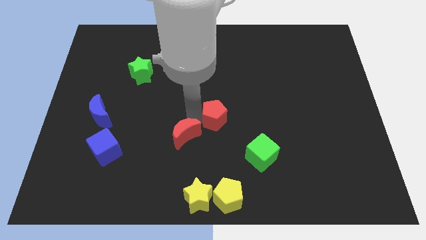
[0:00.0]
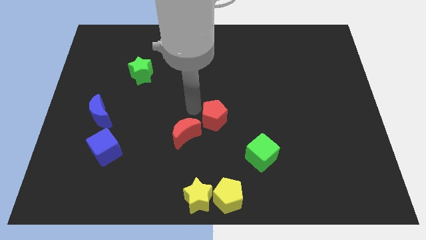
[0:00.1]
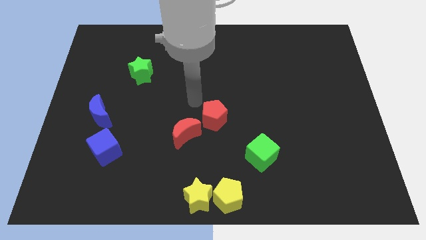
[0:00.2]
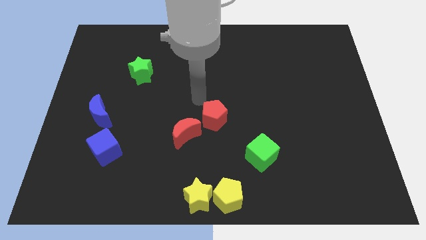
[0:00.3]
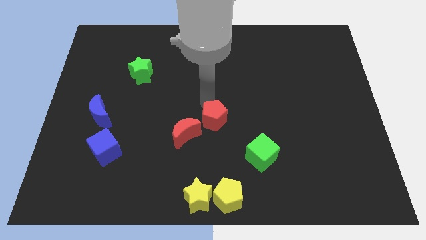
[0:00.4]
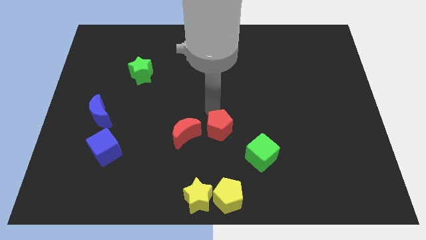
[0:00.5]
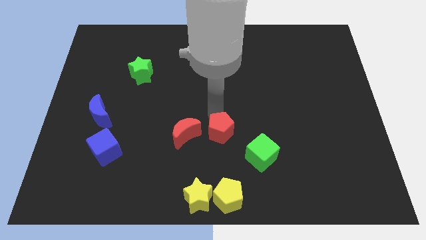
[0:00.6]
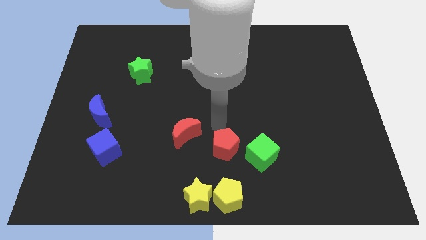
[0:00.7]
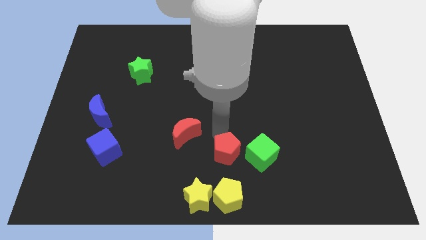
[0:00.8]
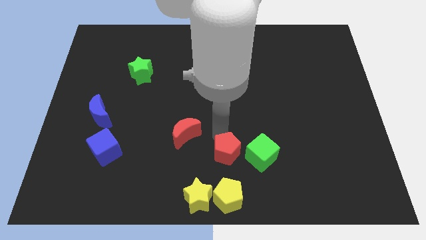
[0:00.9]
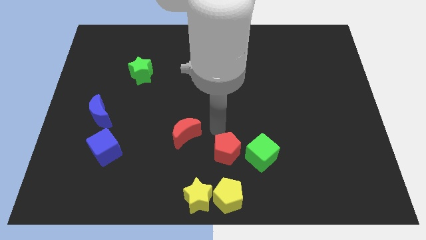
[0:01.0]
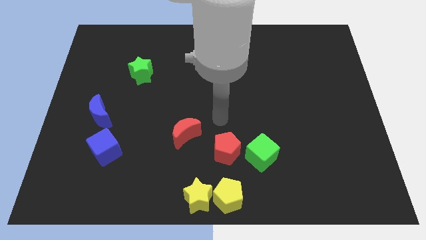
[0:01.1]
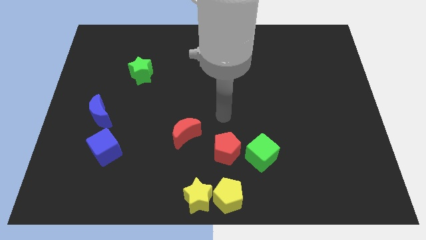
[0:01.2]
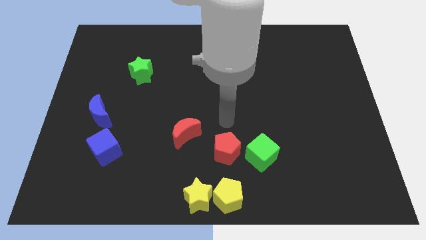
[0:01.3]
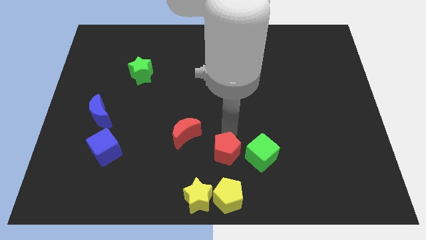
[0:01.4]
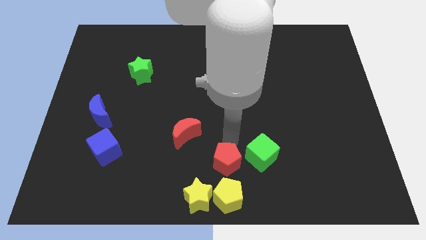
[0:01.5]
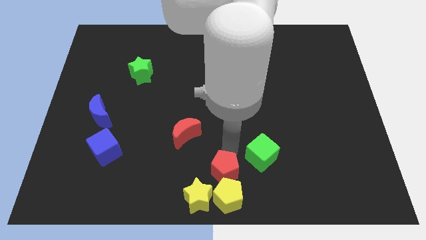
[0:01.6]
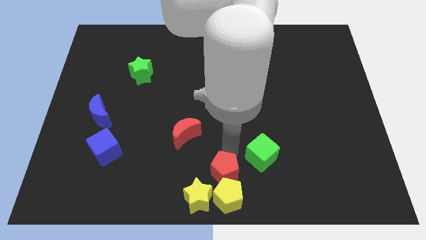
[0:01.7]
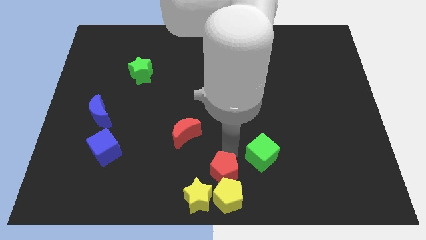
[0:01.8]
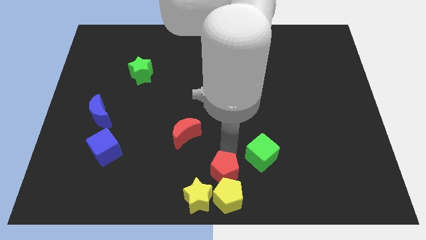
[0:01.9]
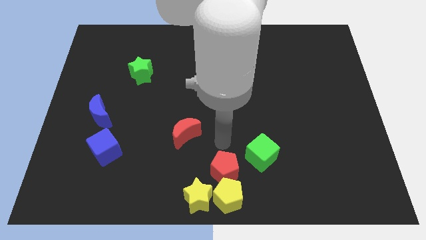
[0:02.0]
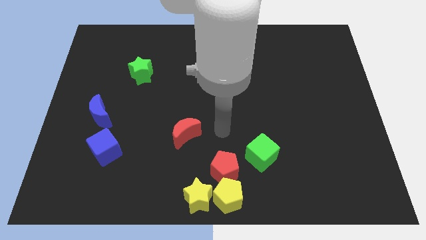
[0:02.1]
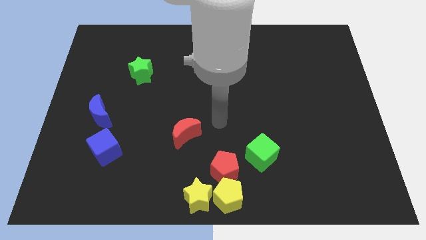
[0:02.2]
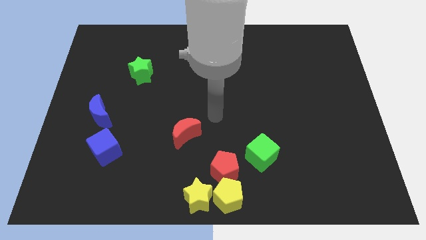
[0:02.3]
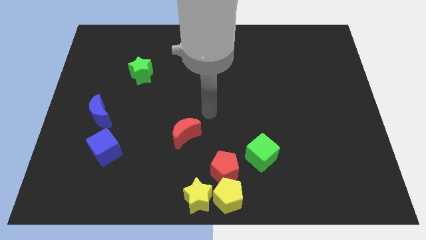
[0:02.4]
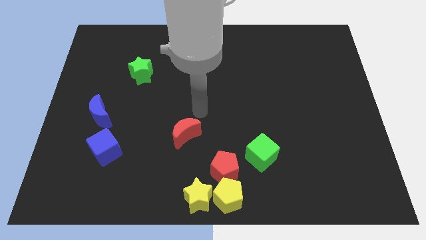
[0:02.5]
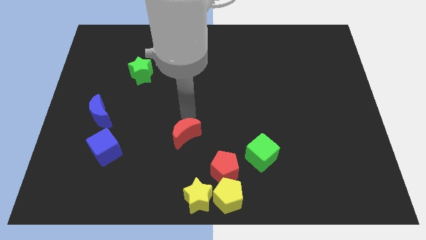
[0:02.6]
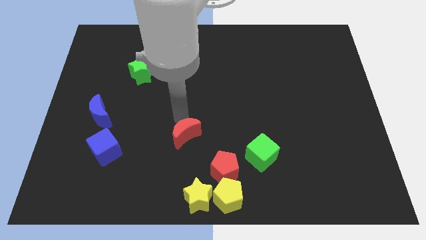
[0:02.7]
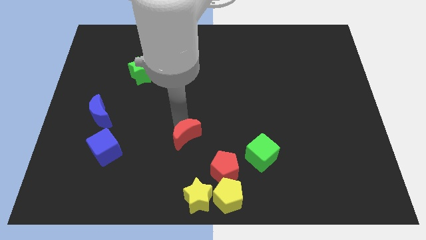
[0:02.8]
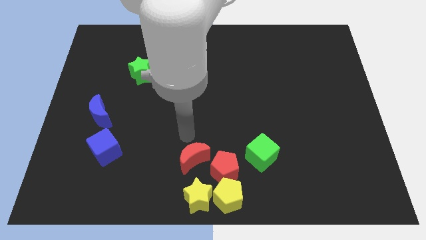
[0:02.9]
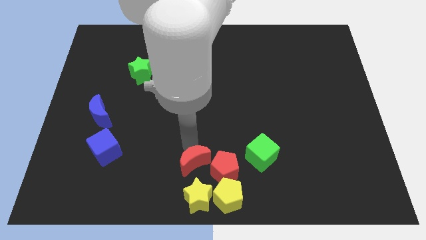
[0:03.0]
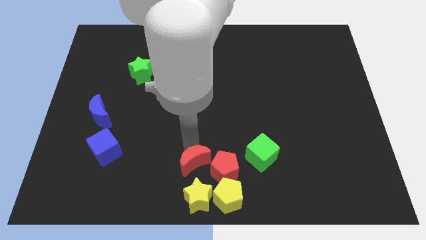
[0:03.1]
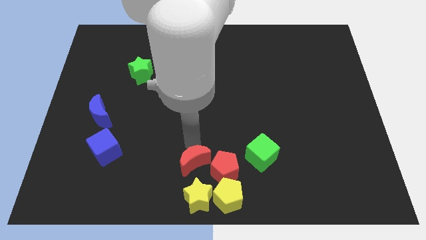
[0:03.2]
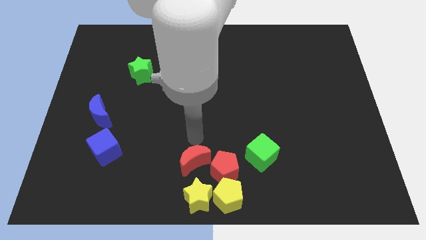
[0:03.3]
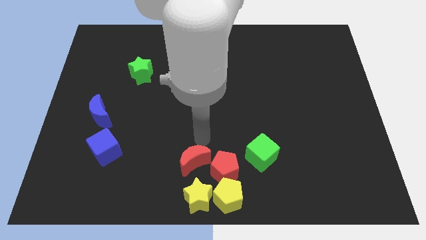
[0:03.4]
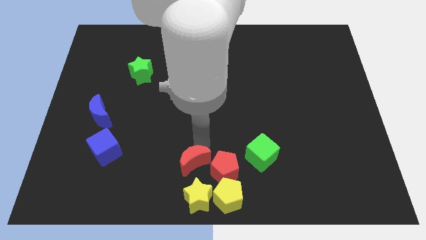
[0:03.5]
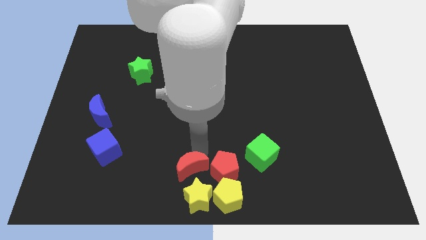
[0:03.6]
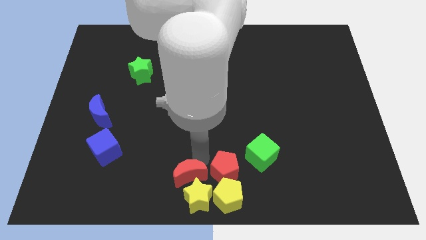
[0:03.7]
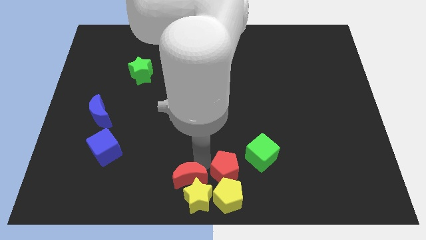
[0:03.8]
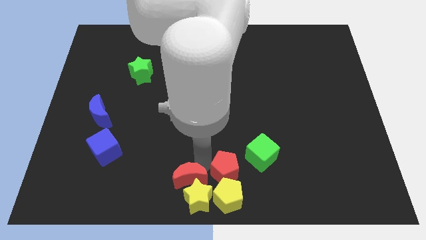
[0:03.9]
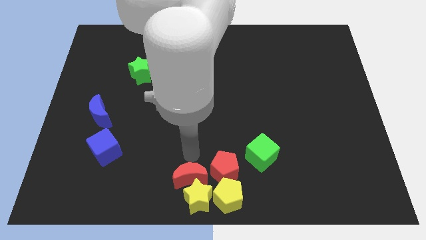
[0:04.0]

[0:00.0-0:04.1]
place red blocks above the yellow blocks

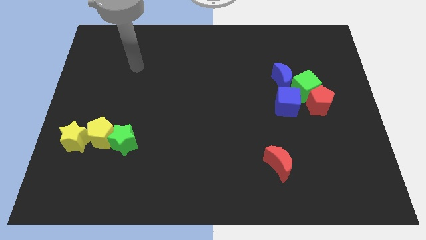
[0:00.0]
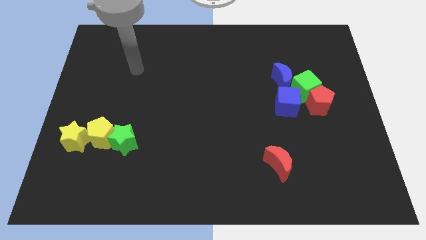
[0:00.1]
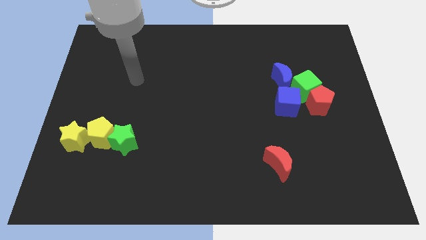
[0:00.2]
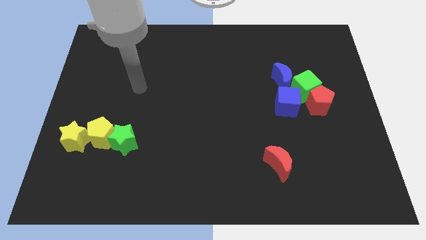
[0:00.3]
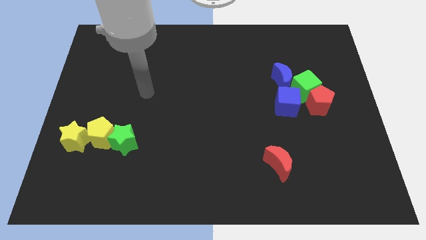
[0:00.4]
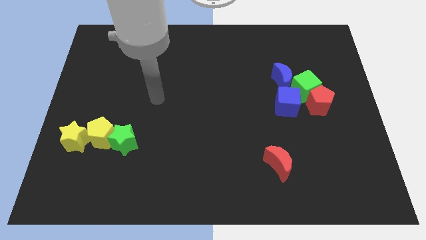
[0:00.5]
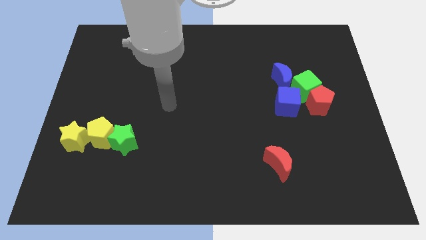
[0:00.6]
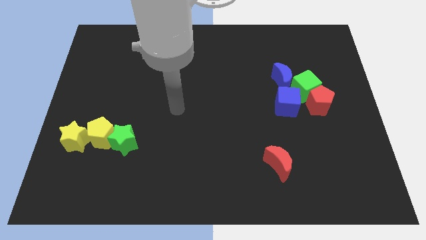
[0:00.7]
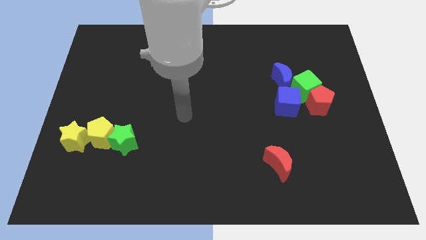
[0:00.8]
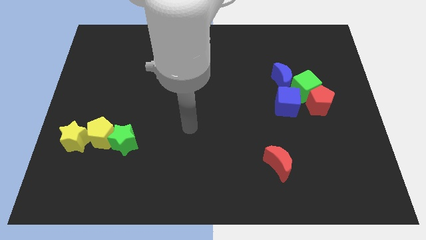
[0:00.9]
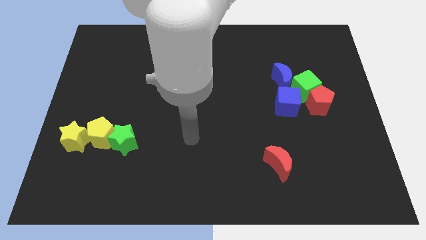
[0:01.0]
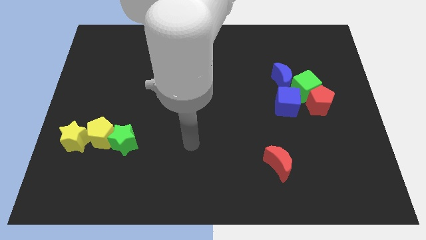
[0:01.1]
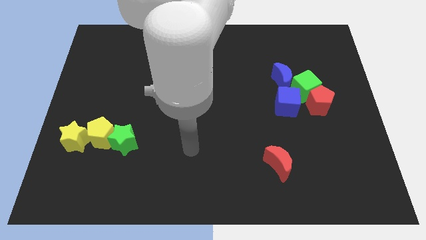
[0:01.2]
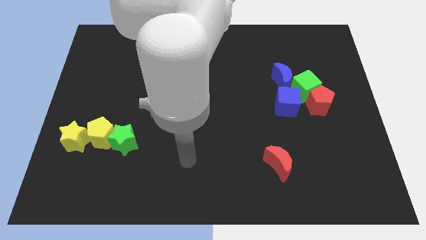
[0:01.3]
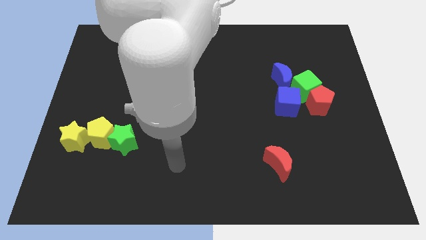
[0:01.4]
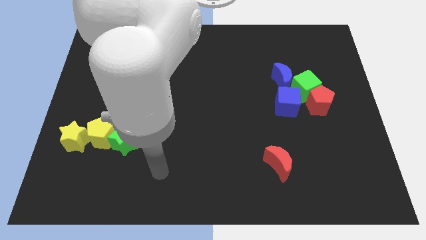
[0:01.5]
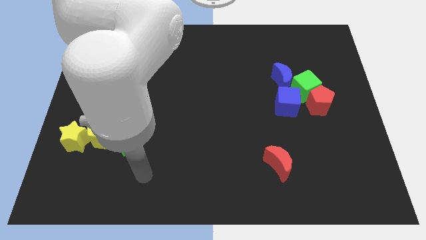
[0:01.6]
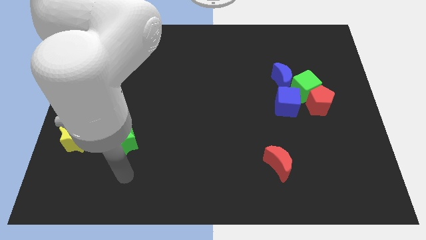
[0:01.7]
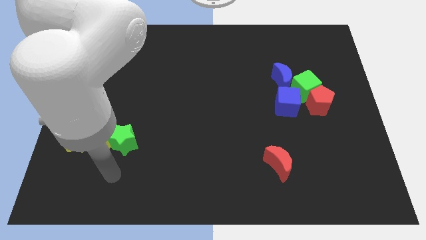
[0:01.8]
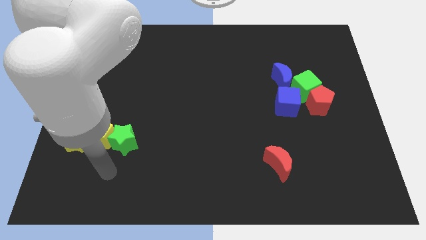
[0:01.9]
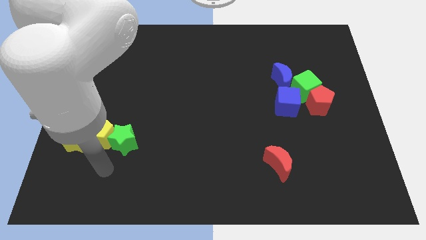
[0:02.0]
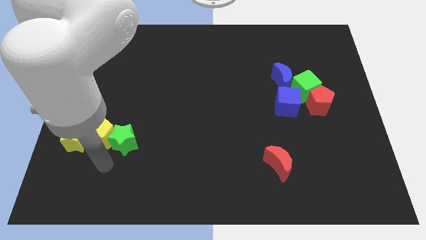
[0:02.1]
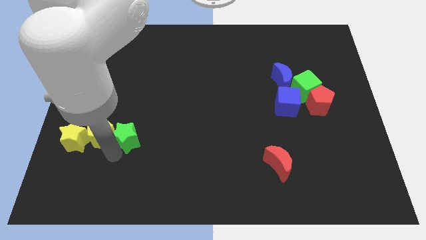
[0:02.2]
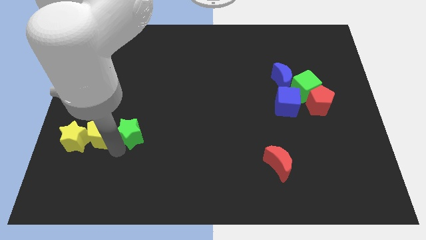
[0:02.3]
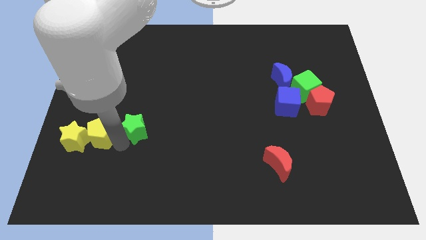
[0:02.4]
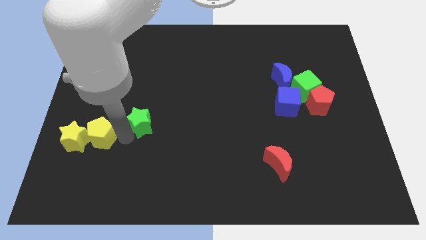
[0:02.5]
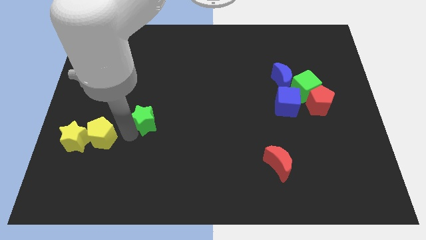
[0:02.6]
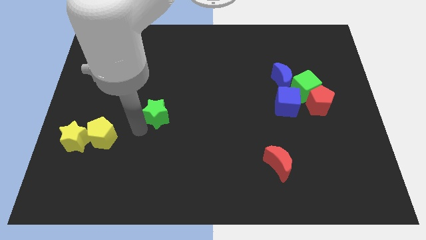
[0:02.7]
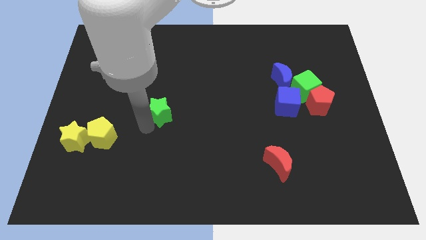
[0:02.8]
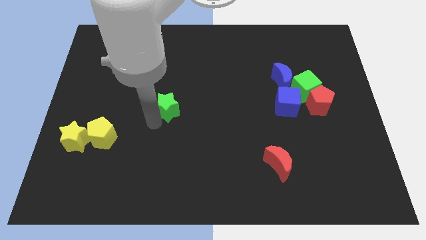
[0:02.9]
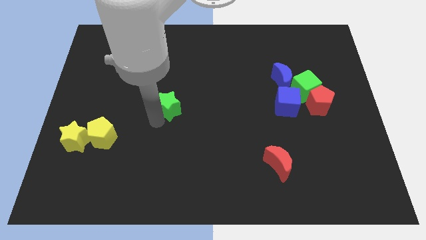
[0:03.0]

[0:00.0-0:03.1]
separate green star from yellow pentagon

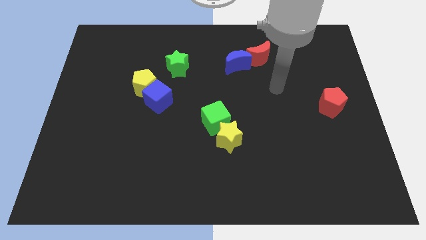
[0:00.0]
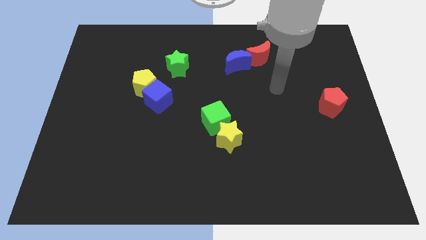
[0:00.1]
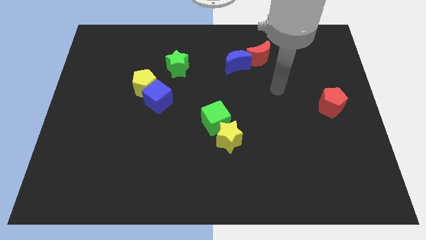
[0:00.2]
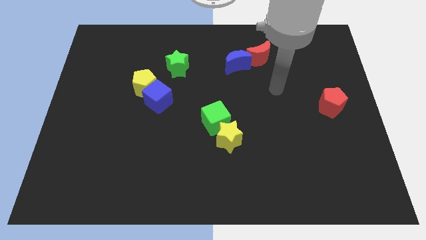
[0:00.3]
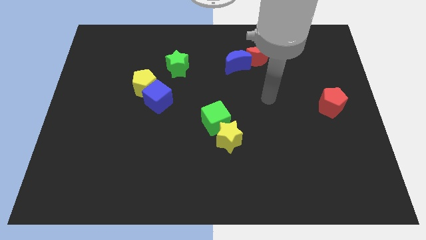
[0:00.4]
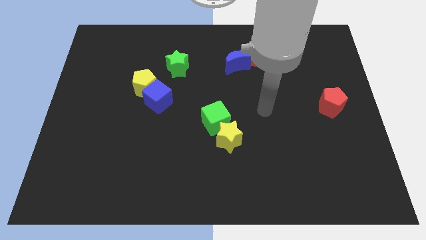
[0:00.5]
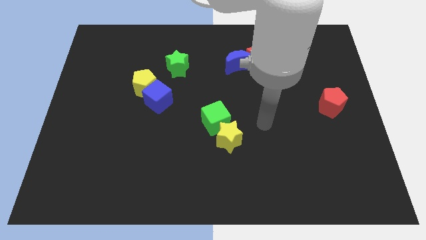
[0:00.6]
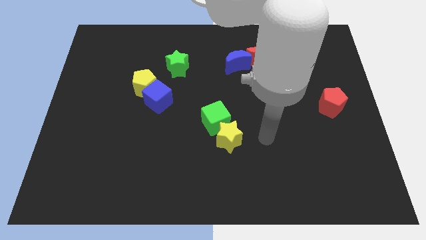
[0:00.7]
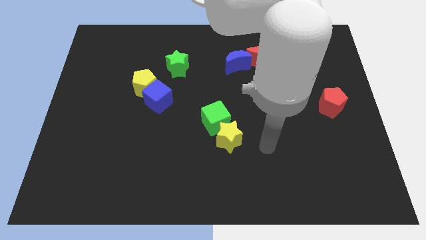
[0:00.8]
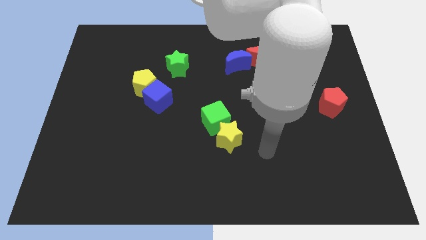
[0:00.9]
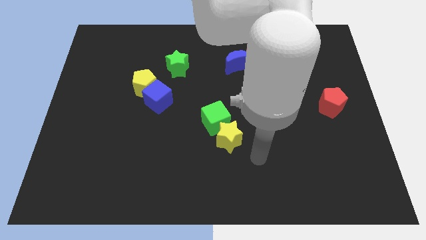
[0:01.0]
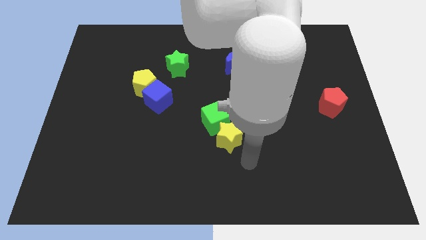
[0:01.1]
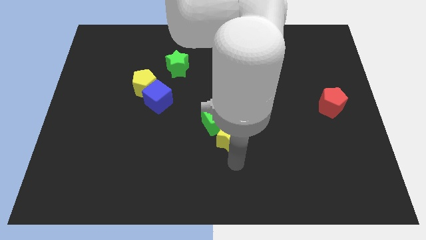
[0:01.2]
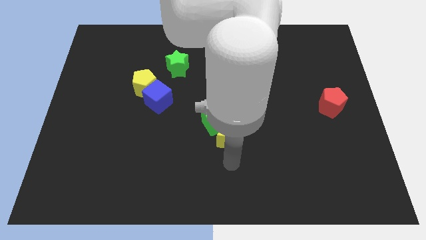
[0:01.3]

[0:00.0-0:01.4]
place your arm to the bottom of yellow star

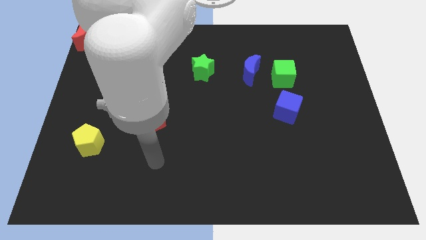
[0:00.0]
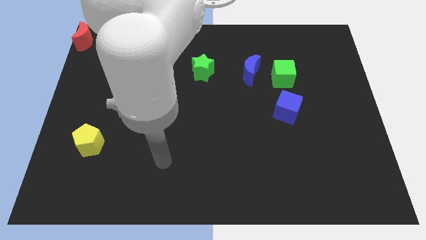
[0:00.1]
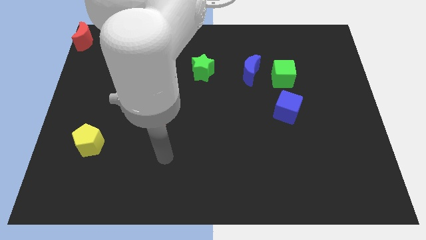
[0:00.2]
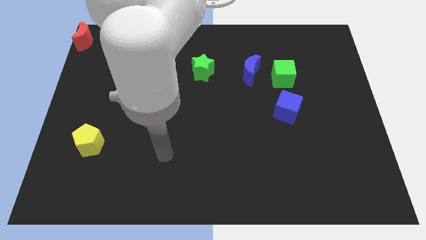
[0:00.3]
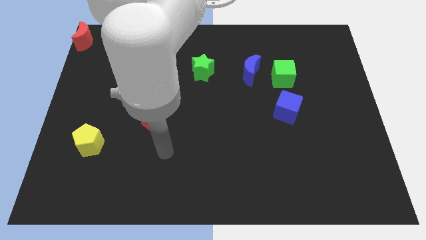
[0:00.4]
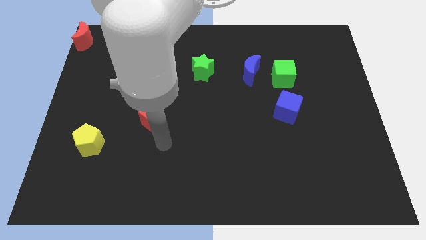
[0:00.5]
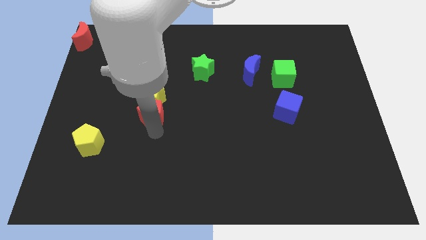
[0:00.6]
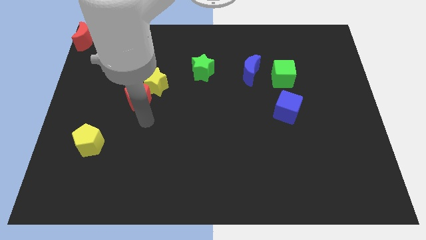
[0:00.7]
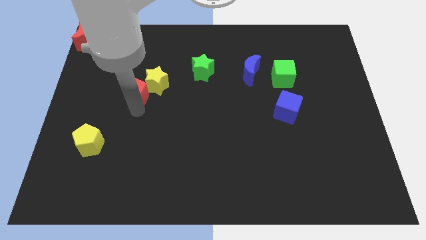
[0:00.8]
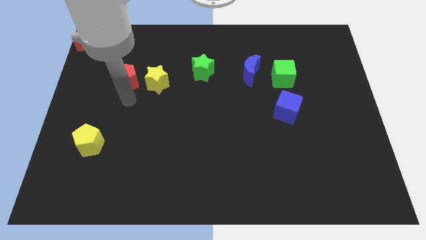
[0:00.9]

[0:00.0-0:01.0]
separate the red pentagon and yellow star
